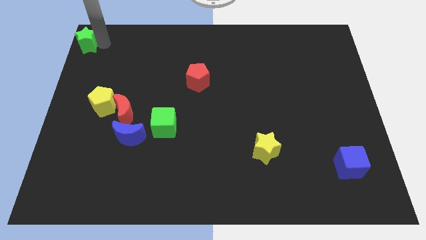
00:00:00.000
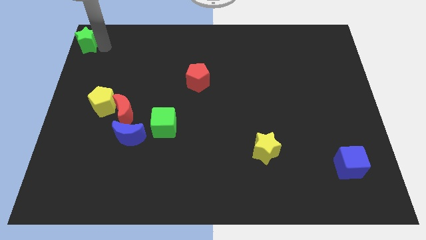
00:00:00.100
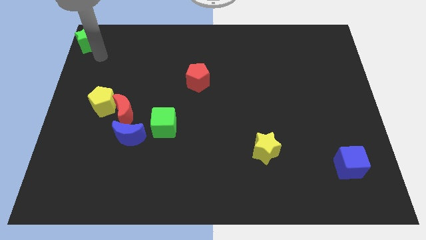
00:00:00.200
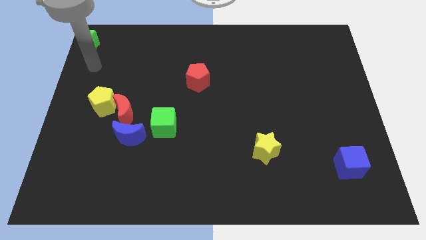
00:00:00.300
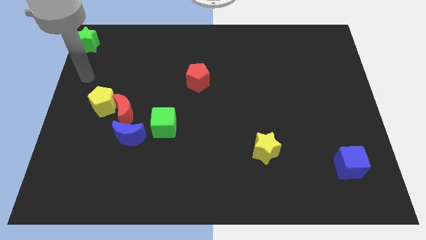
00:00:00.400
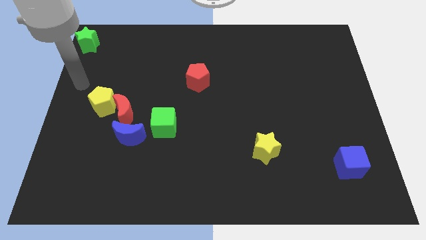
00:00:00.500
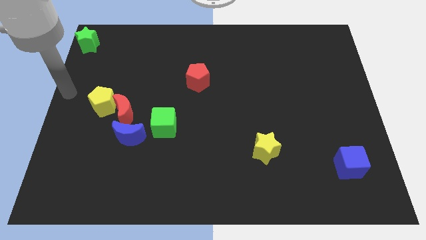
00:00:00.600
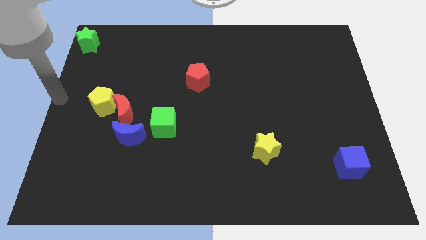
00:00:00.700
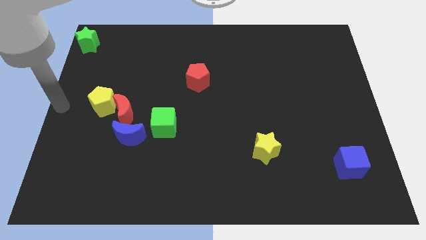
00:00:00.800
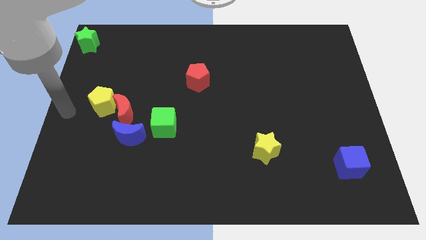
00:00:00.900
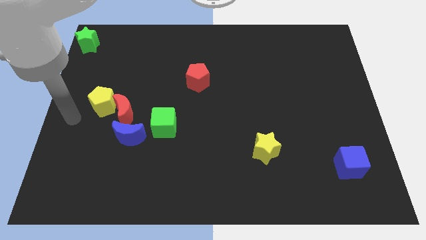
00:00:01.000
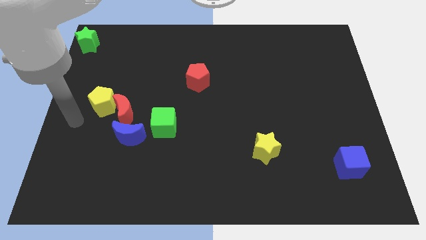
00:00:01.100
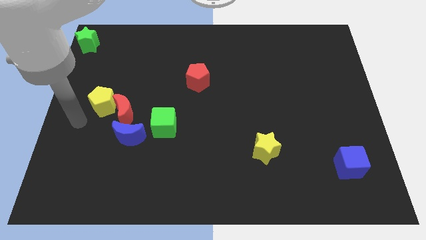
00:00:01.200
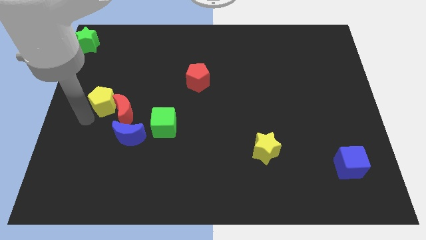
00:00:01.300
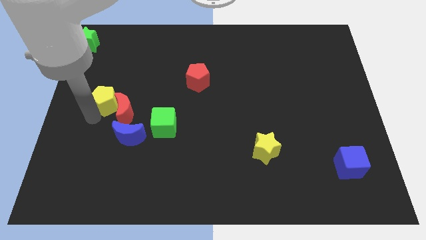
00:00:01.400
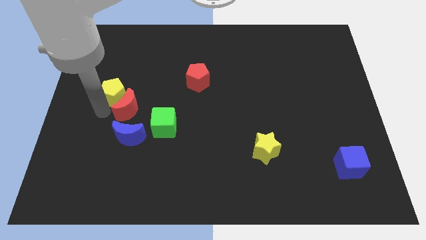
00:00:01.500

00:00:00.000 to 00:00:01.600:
place the arm under yellow pentagon

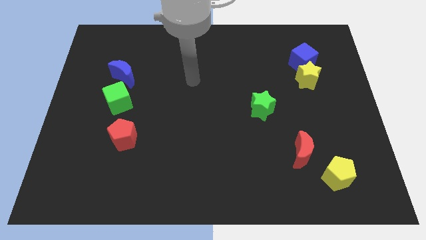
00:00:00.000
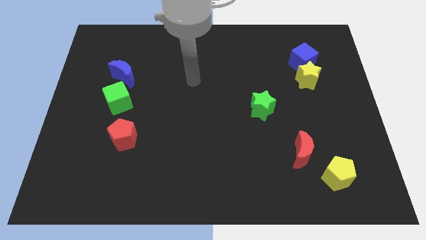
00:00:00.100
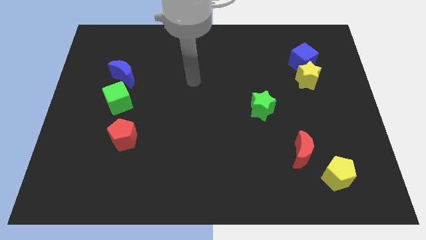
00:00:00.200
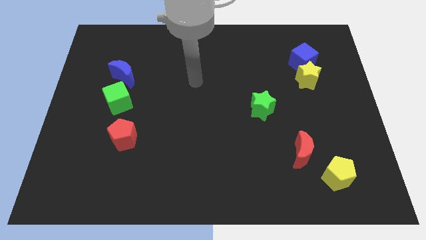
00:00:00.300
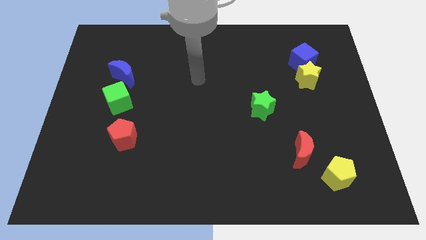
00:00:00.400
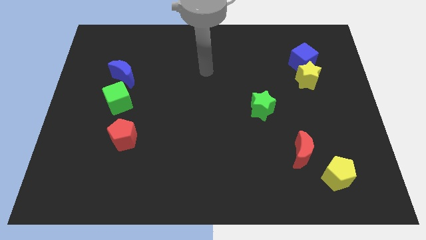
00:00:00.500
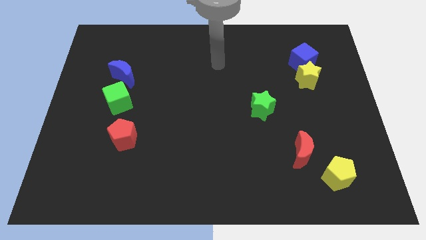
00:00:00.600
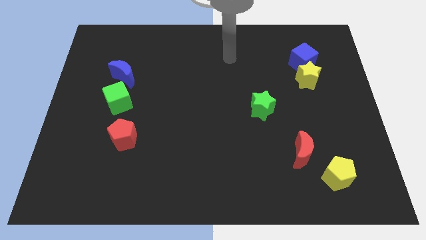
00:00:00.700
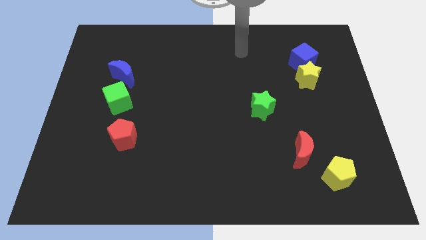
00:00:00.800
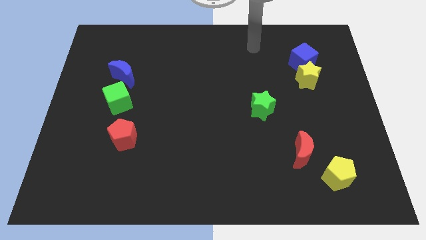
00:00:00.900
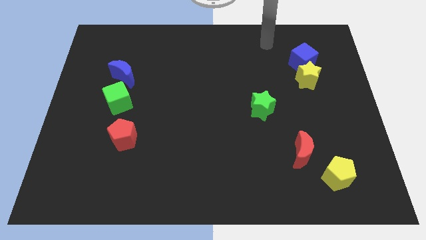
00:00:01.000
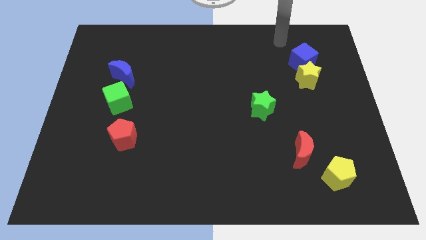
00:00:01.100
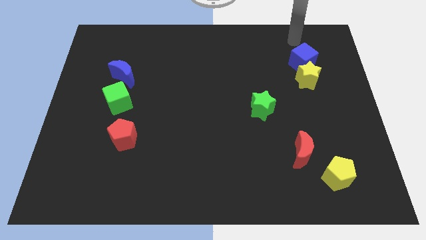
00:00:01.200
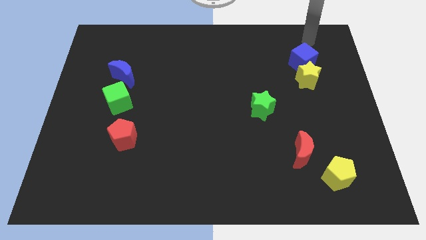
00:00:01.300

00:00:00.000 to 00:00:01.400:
point the arm to the top of blue cube

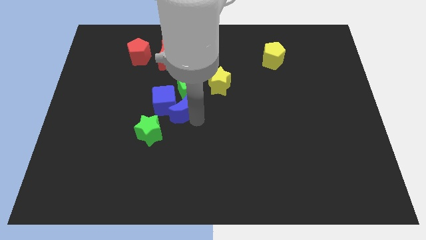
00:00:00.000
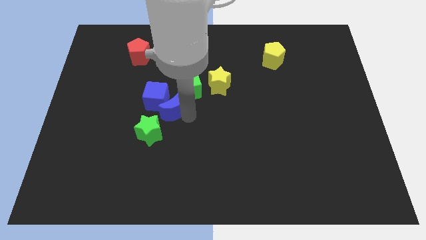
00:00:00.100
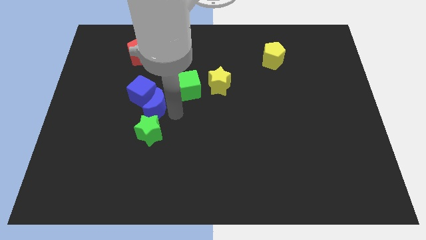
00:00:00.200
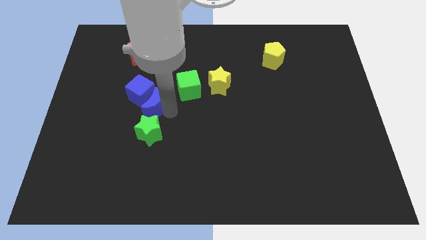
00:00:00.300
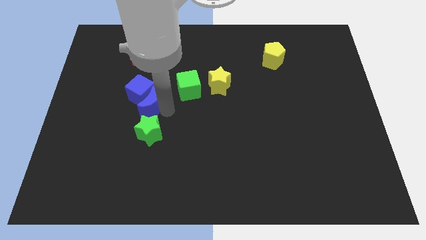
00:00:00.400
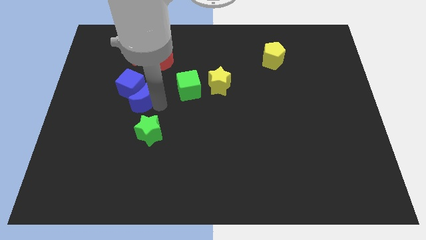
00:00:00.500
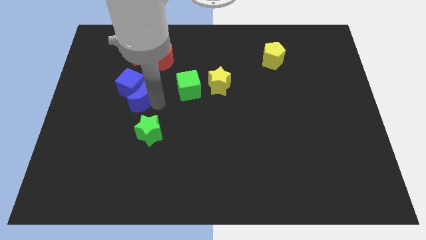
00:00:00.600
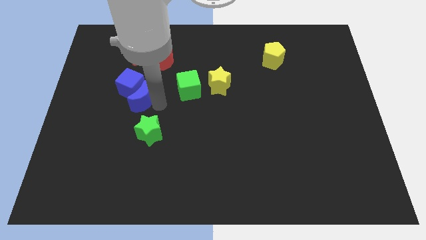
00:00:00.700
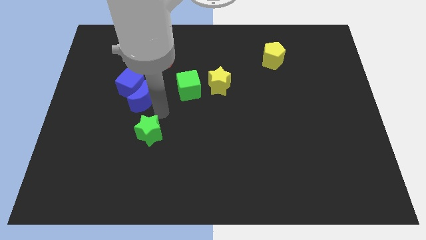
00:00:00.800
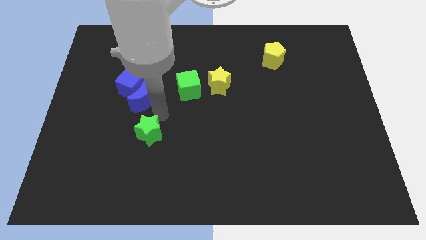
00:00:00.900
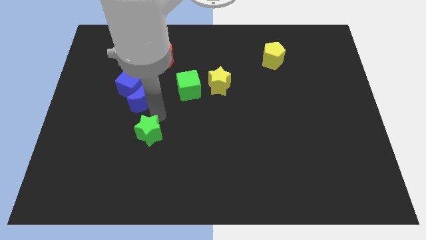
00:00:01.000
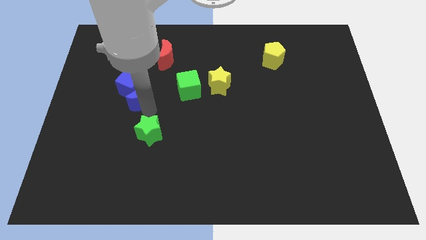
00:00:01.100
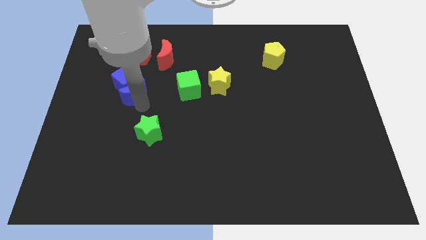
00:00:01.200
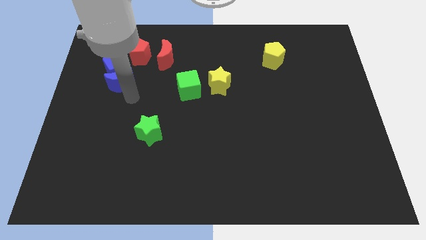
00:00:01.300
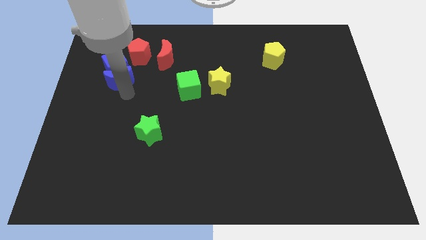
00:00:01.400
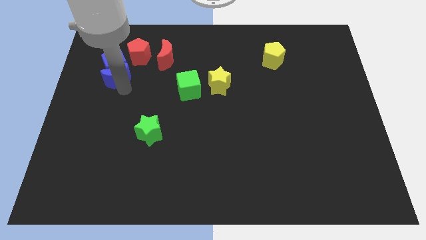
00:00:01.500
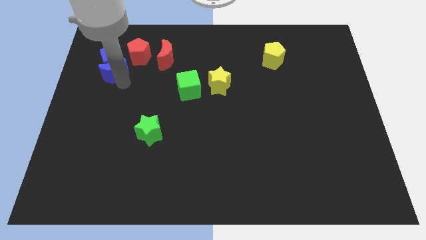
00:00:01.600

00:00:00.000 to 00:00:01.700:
push blue crescent and blue cube together slightly to the top left wards

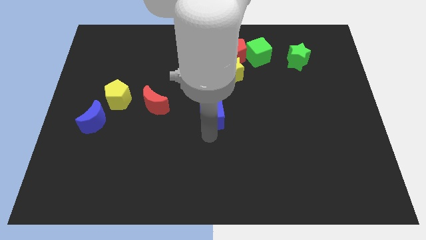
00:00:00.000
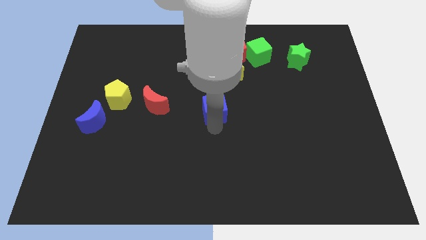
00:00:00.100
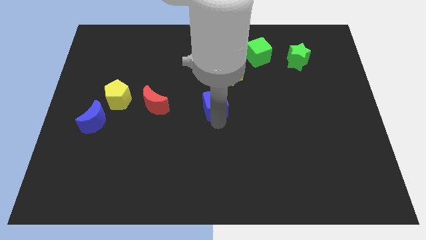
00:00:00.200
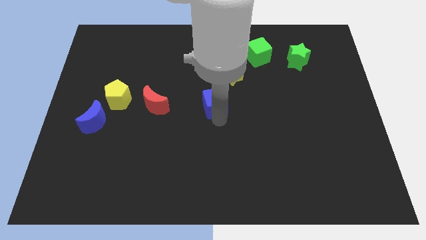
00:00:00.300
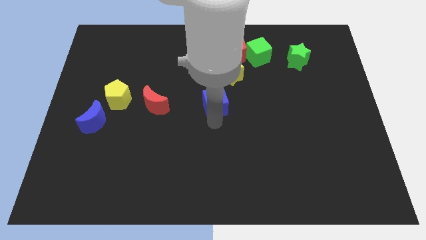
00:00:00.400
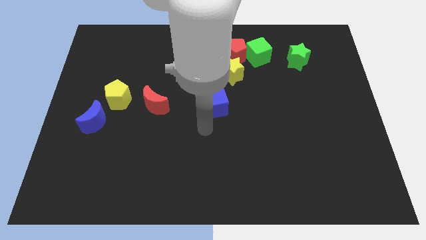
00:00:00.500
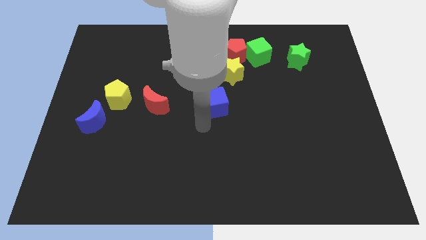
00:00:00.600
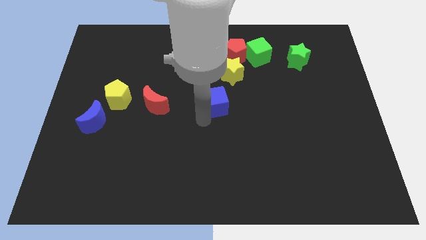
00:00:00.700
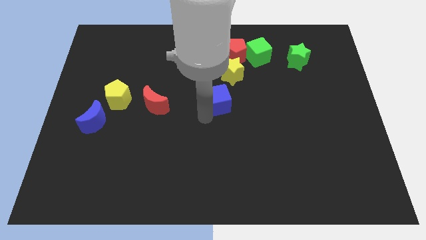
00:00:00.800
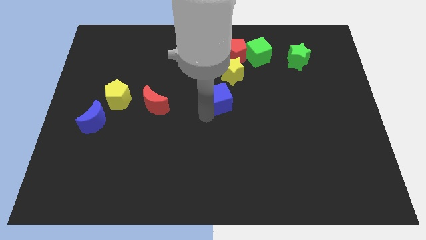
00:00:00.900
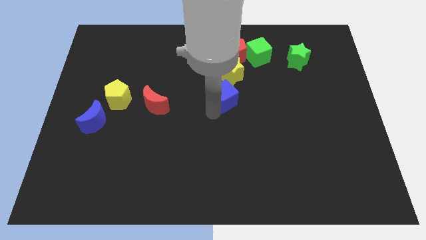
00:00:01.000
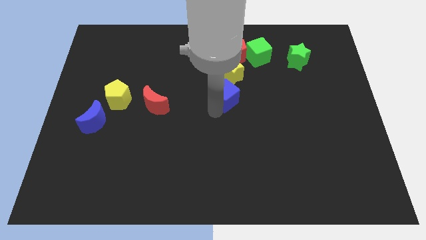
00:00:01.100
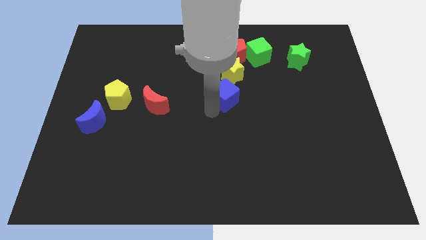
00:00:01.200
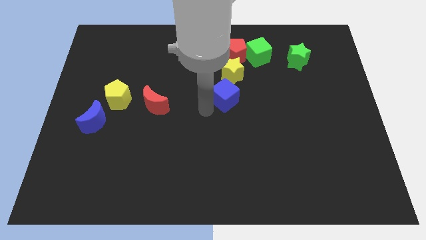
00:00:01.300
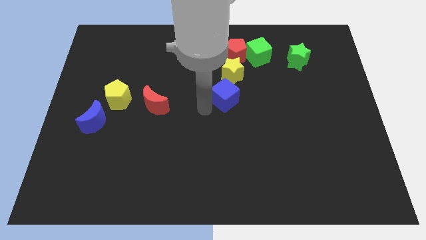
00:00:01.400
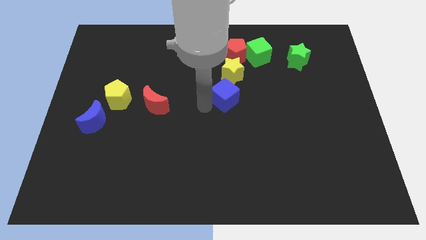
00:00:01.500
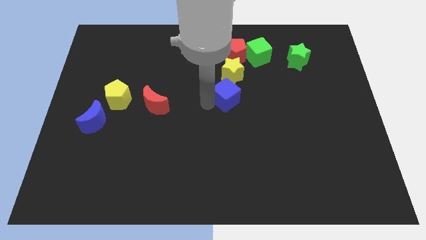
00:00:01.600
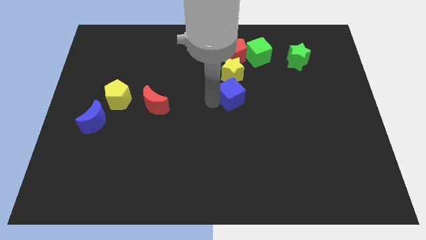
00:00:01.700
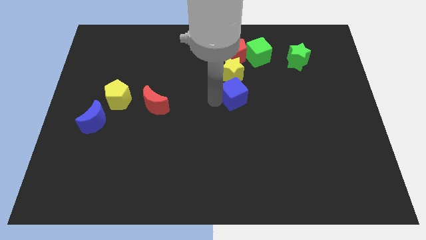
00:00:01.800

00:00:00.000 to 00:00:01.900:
move the blue cube to the bottom of the yellow star

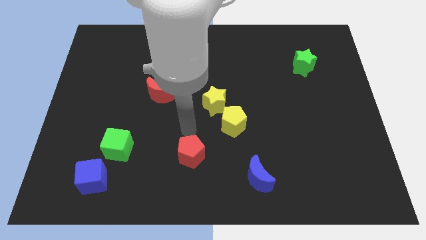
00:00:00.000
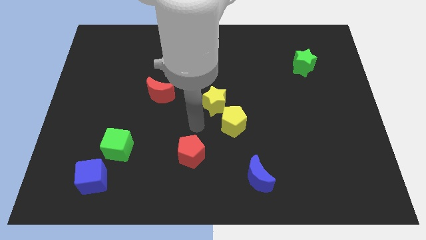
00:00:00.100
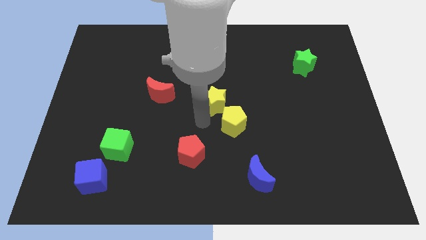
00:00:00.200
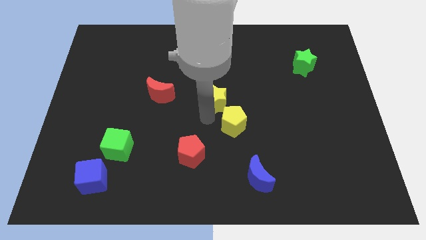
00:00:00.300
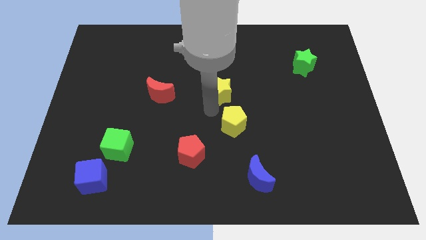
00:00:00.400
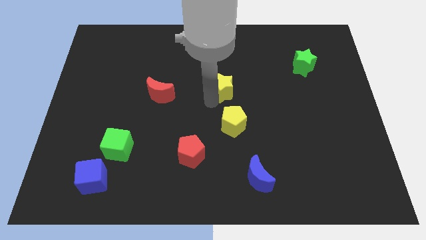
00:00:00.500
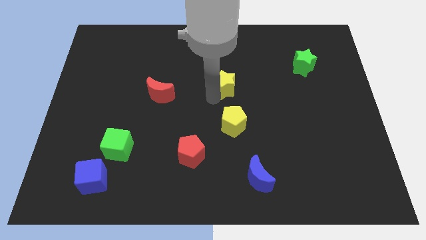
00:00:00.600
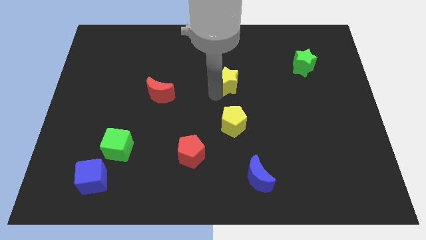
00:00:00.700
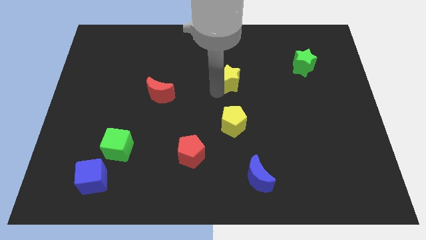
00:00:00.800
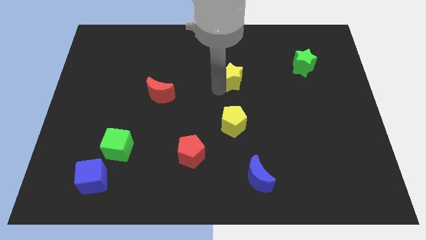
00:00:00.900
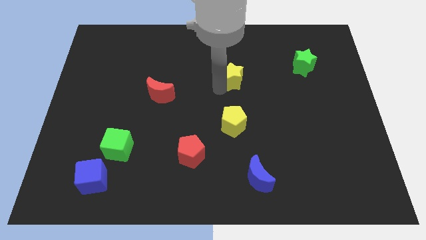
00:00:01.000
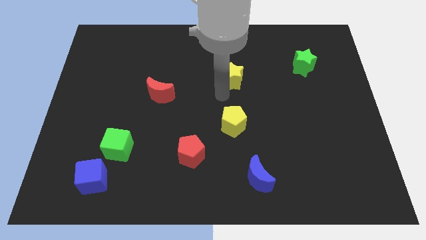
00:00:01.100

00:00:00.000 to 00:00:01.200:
push the yellow star to the top of the yellow pentagon

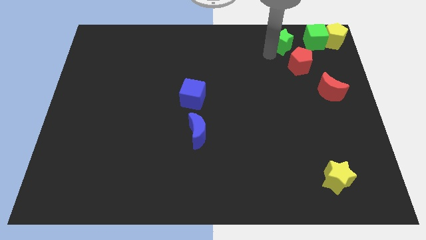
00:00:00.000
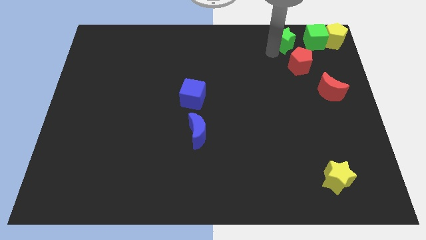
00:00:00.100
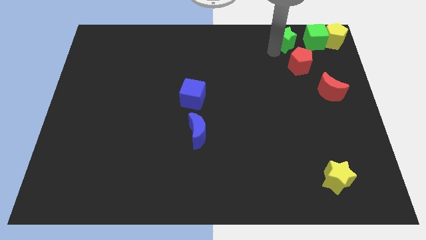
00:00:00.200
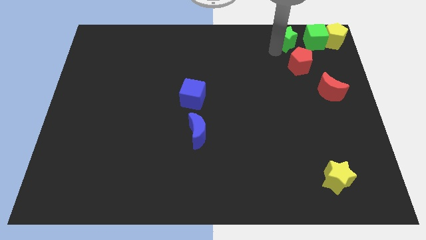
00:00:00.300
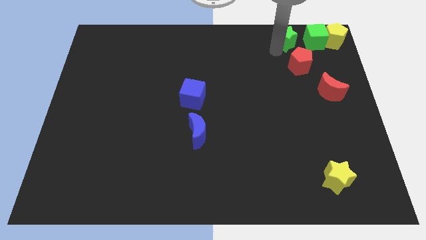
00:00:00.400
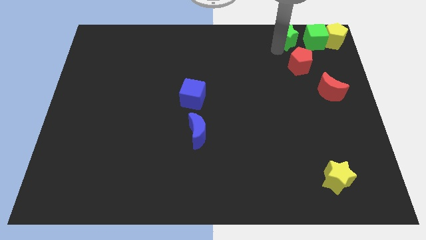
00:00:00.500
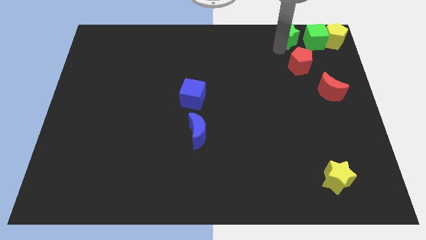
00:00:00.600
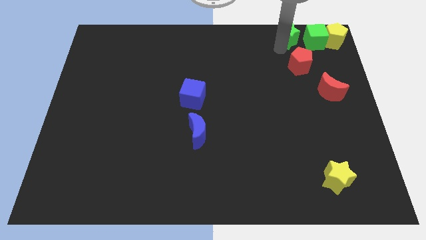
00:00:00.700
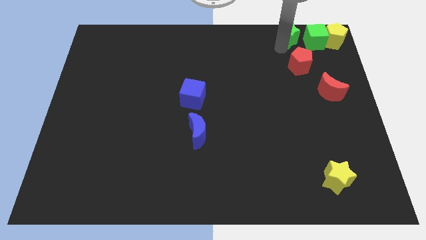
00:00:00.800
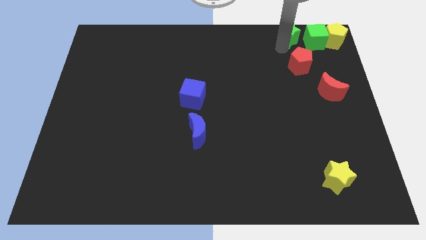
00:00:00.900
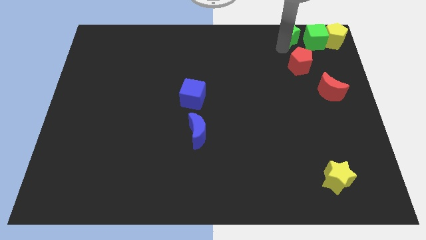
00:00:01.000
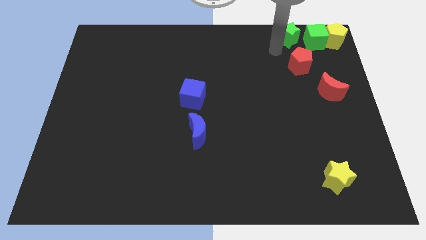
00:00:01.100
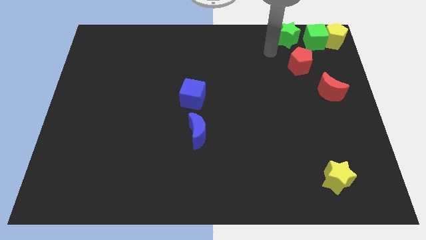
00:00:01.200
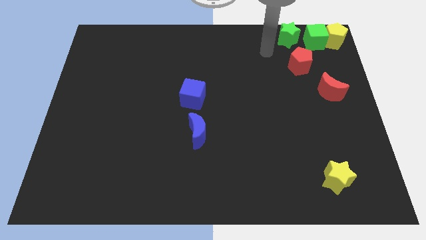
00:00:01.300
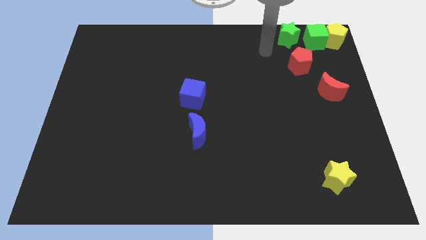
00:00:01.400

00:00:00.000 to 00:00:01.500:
push the green star to the left of the green cube
